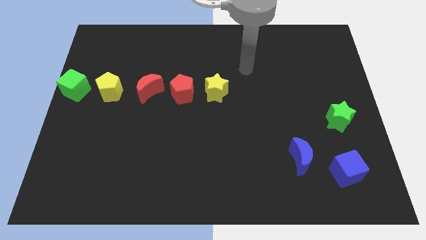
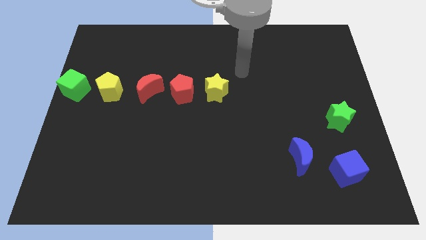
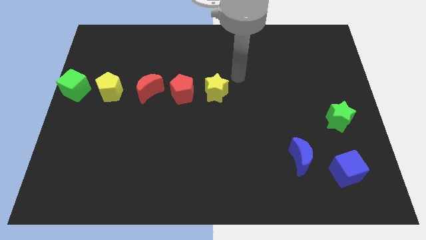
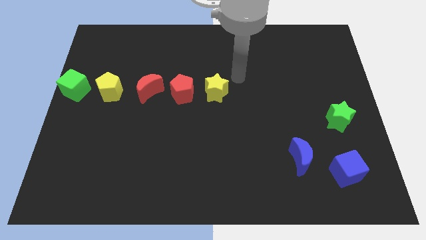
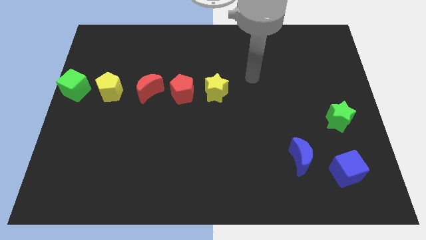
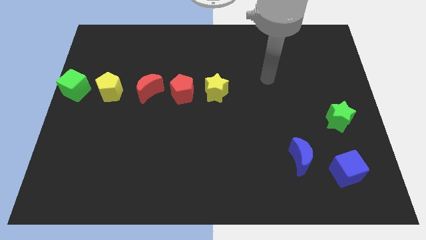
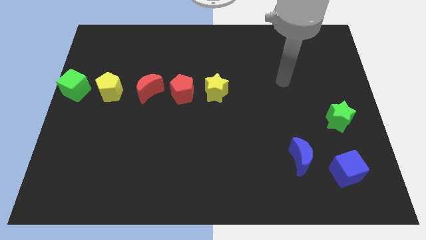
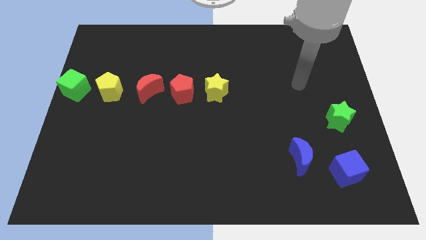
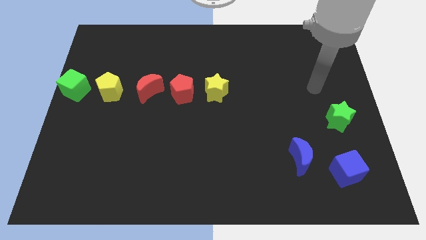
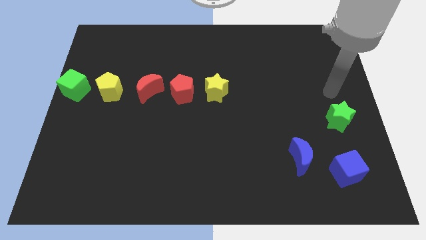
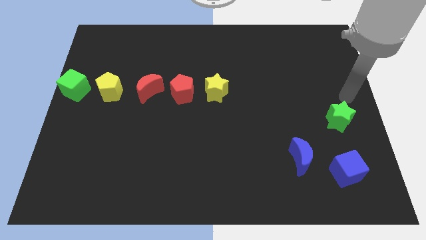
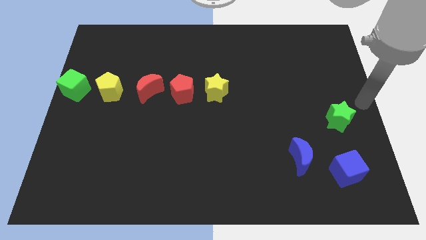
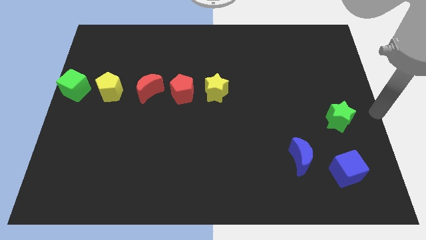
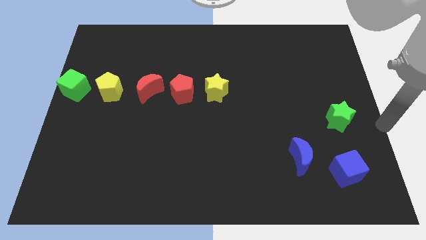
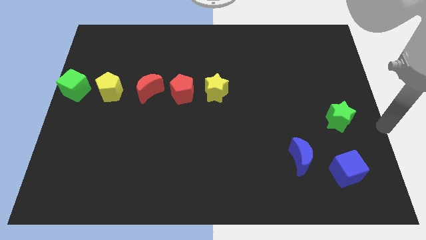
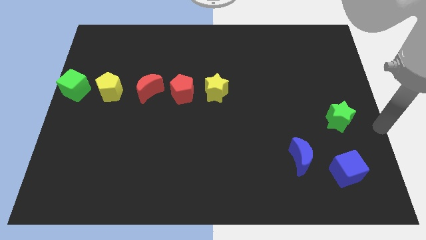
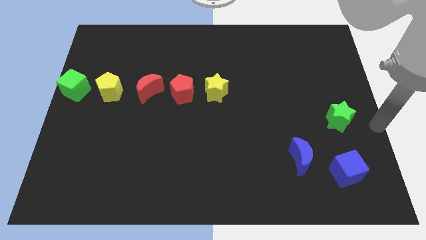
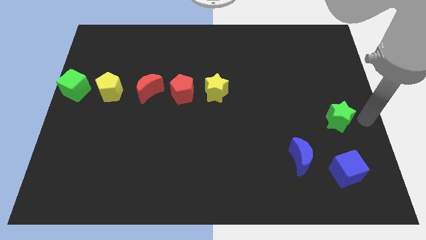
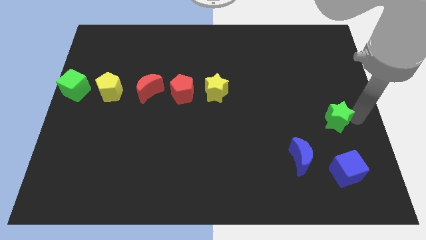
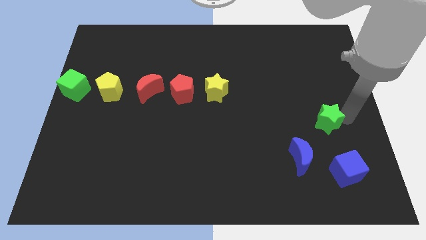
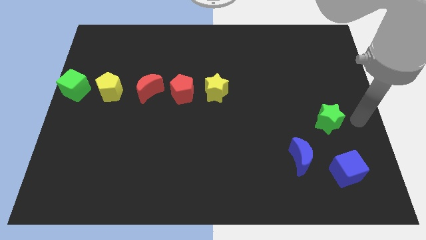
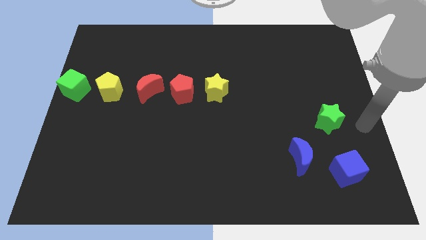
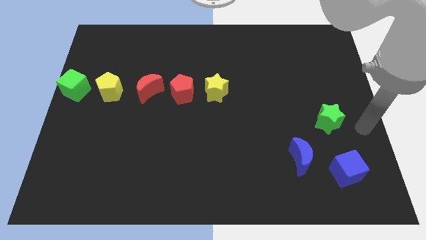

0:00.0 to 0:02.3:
slightly move the green star towards left

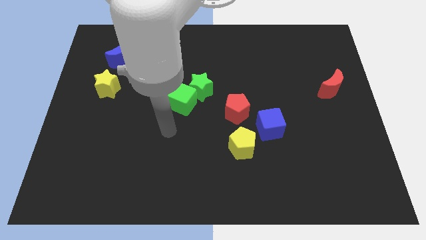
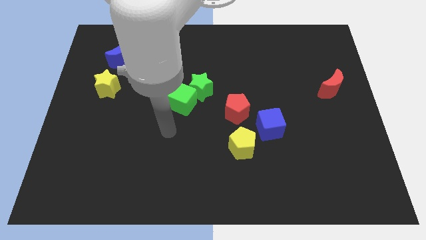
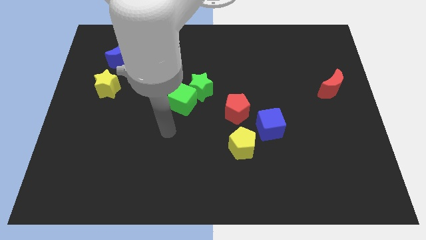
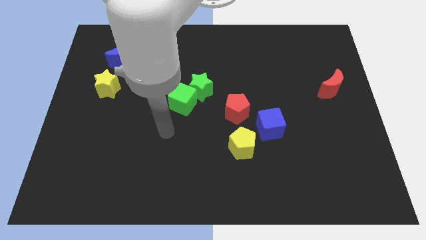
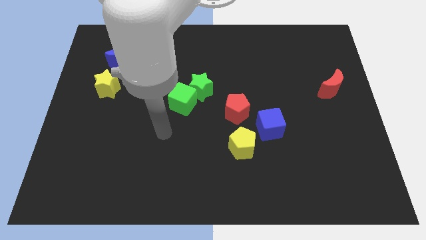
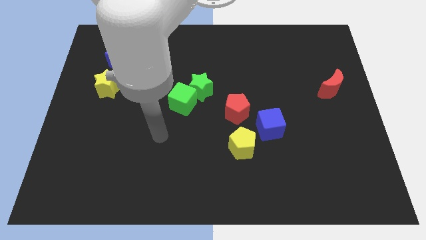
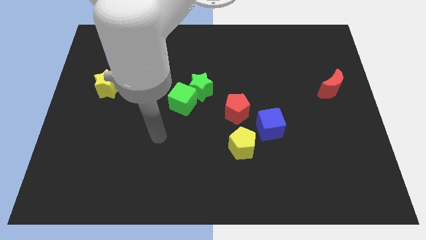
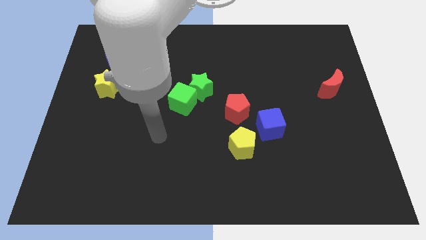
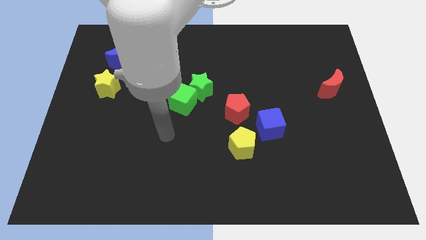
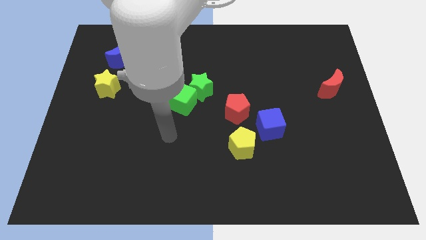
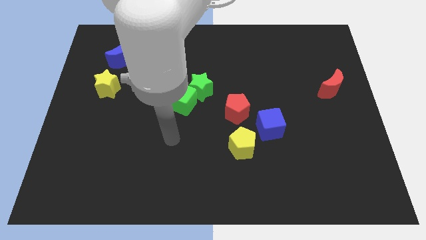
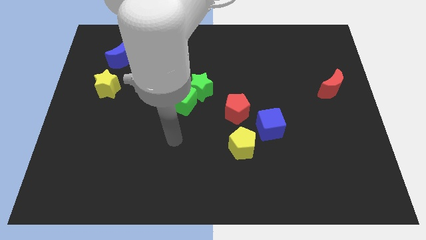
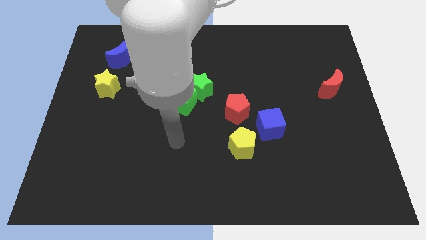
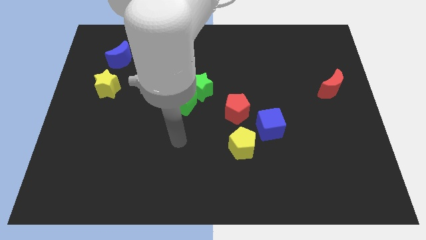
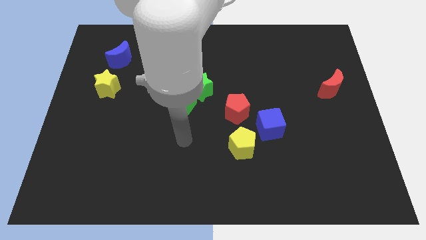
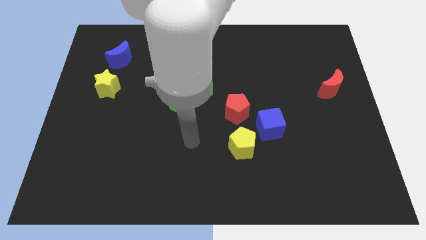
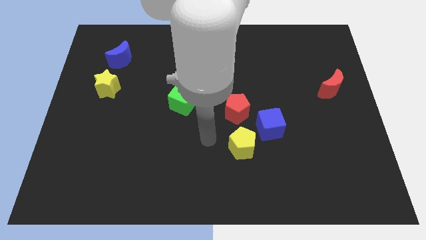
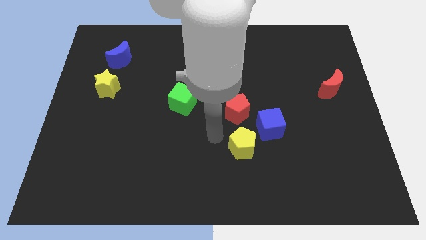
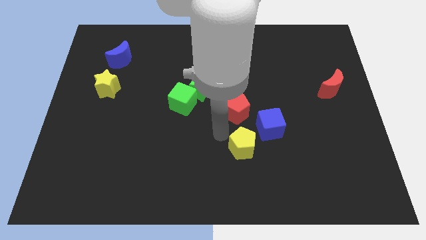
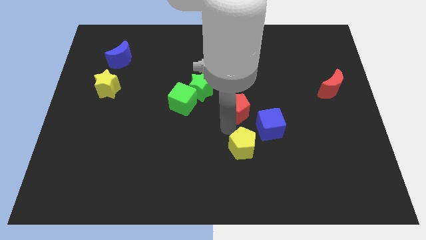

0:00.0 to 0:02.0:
move the arm towards the yellow pentagon

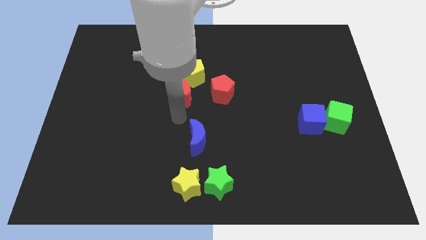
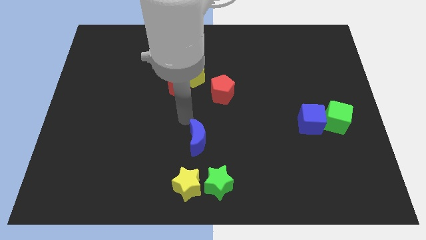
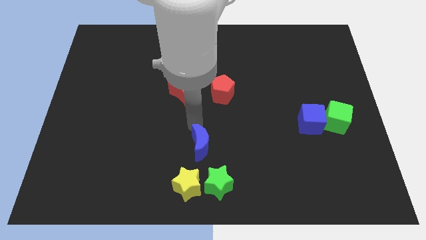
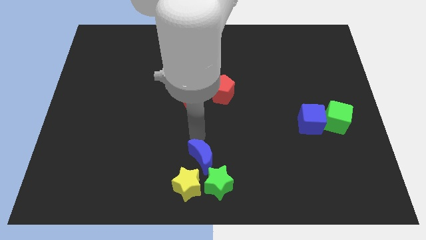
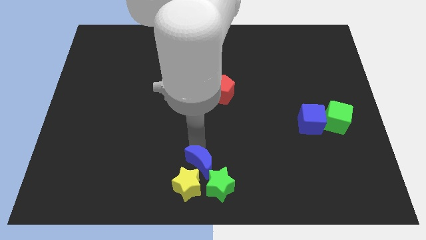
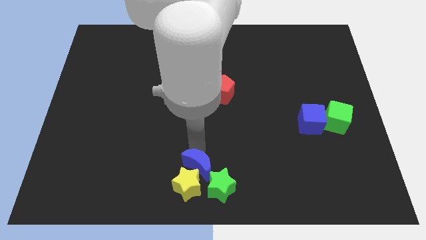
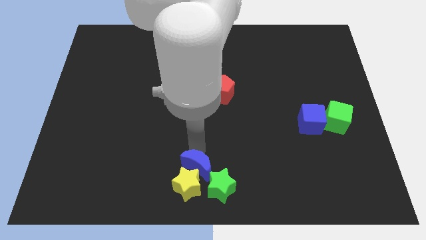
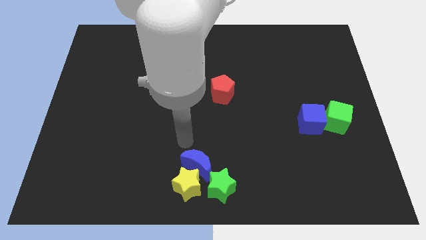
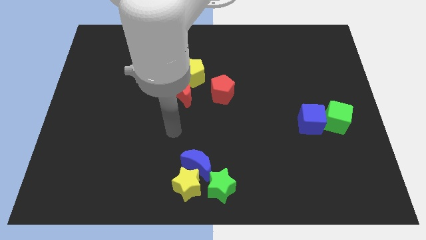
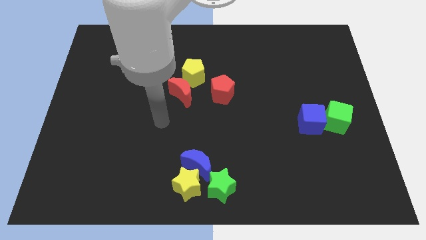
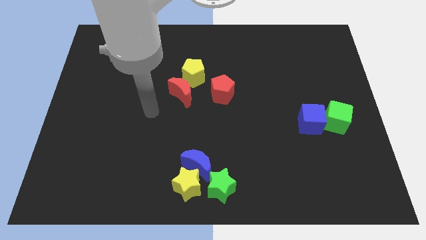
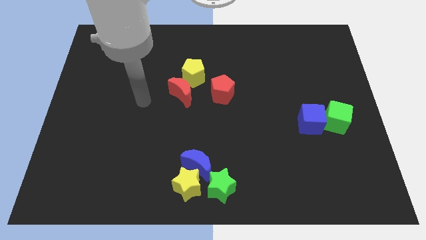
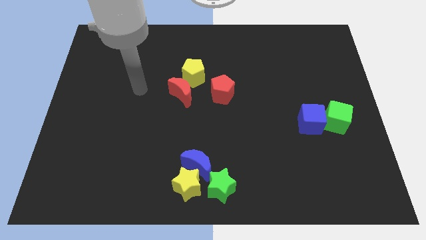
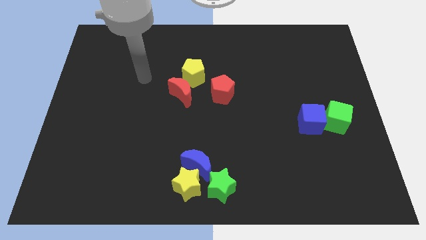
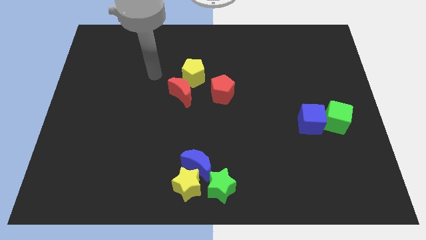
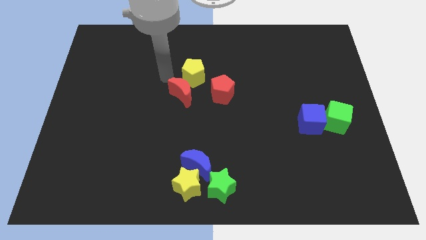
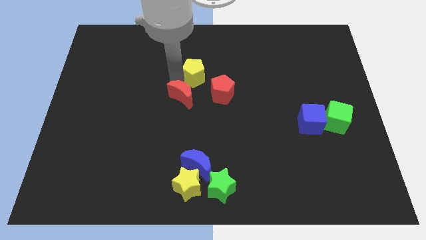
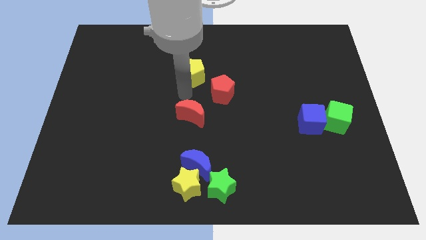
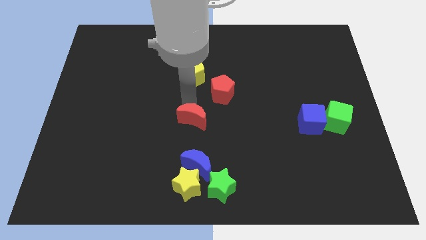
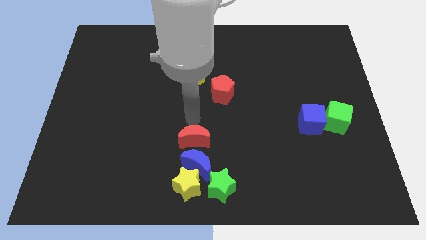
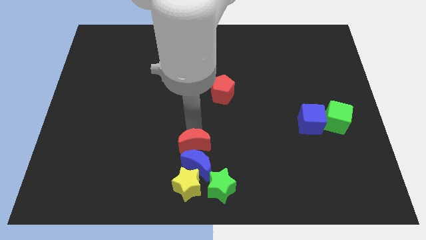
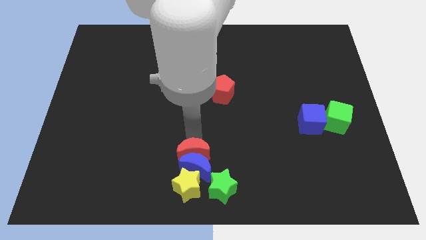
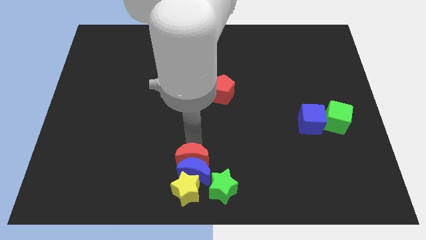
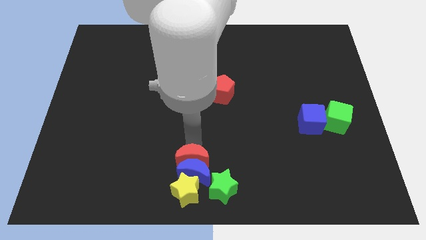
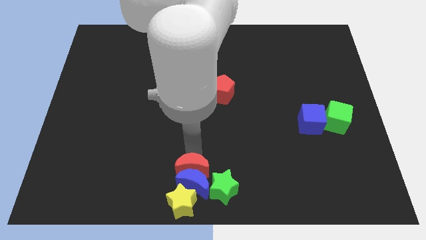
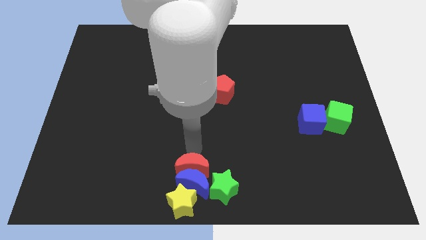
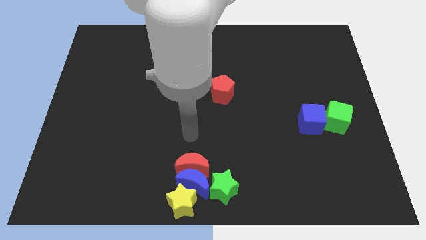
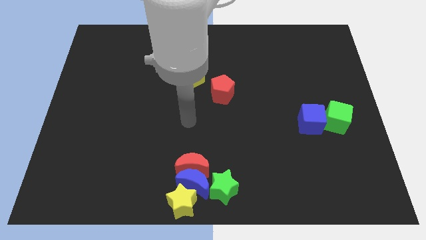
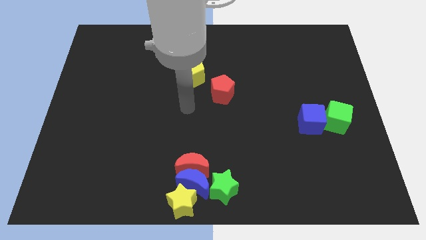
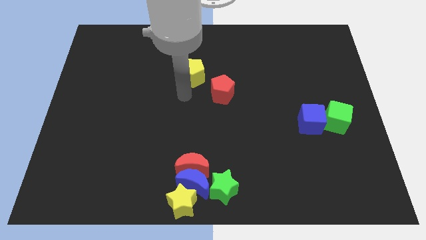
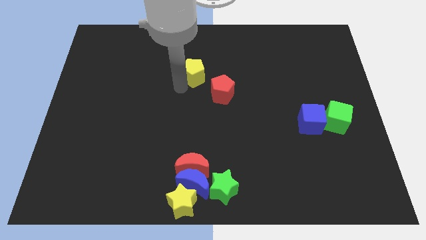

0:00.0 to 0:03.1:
place the red moon on the top of blue moon

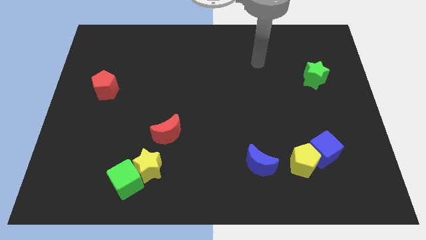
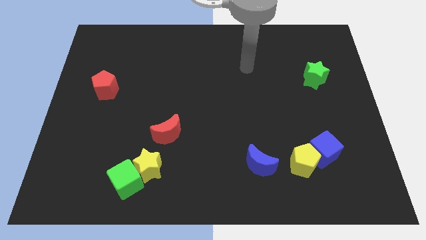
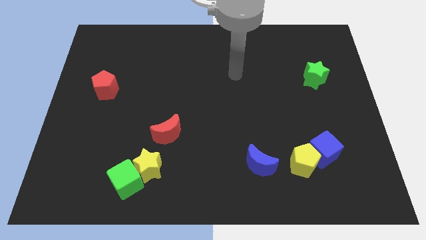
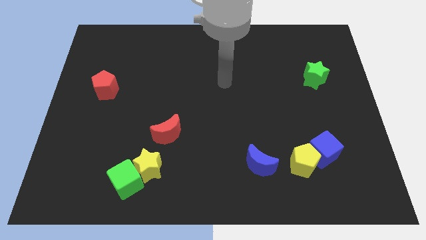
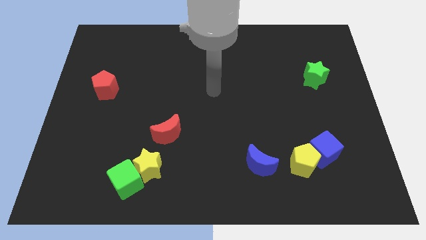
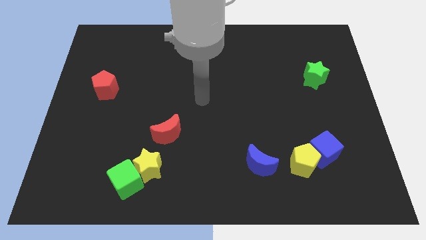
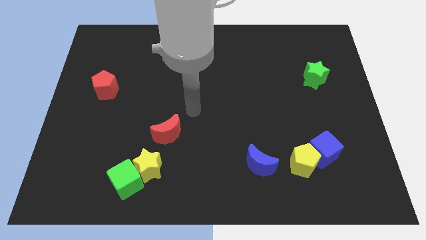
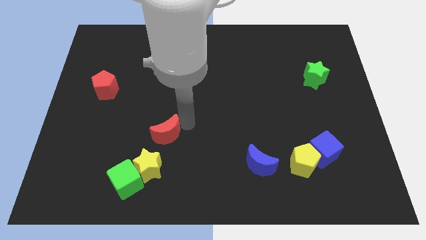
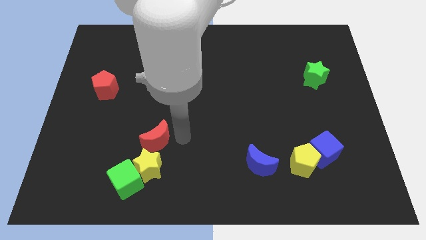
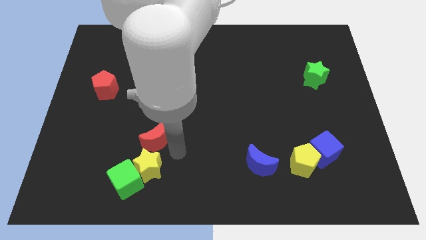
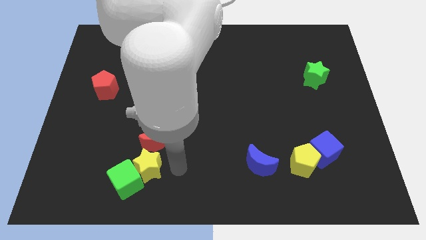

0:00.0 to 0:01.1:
tap the red moon

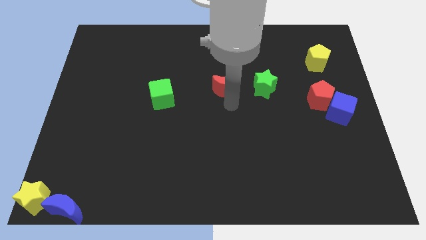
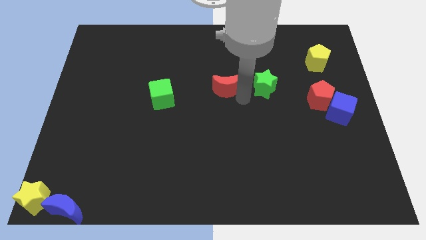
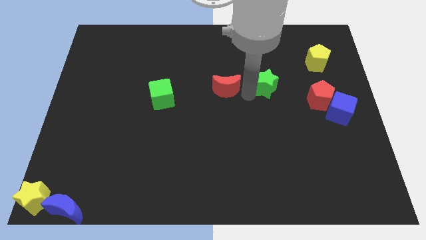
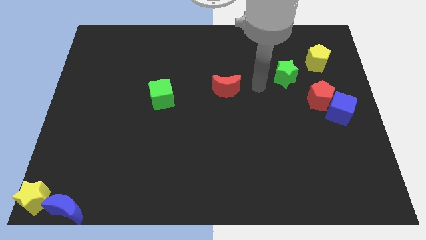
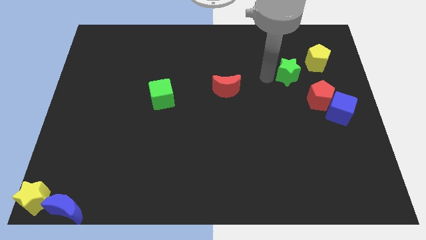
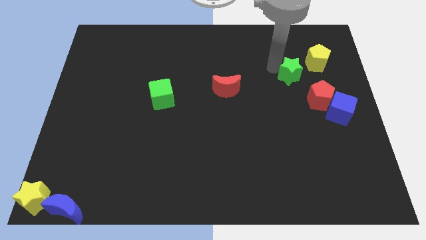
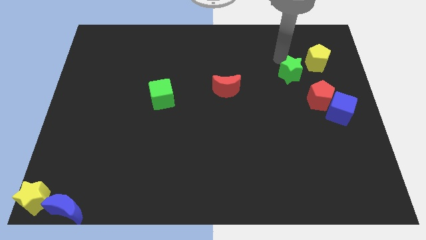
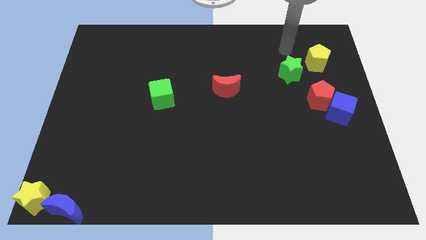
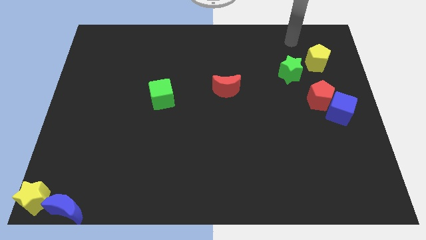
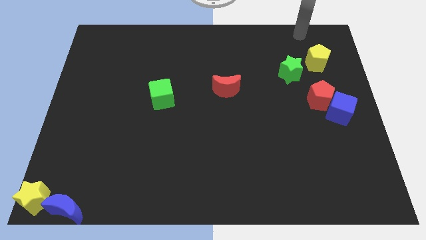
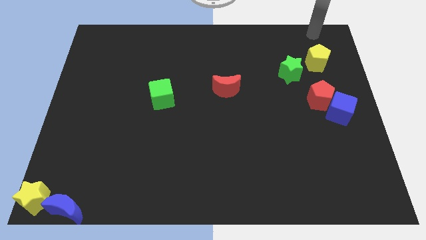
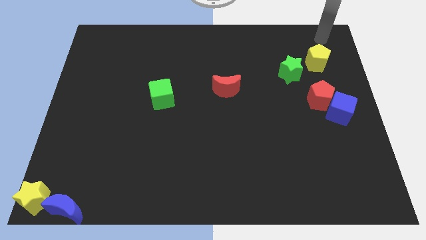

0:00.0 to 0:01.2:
move the green star slightly towards the yellow pentagon
